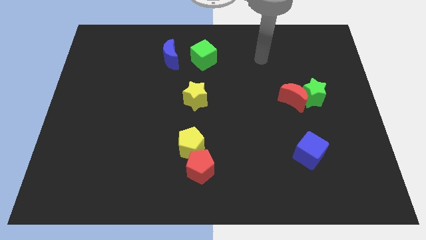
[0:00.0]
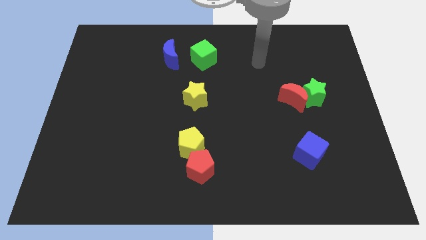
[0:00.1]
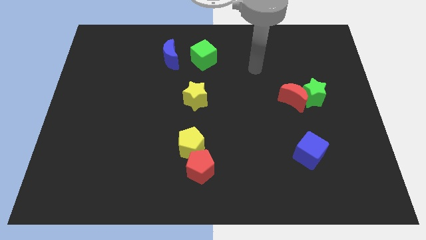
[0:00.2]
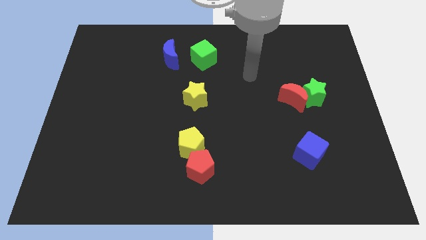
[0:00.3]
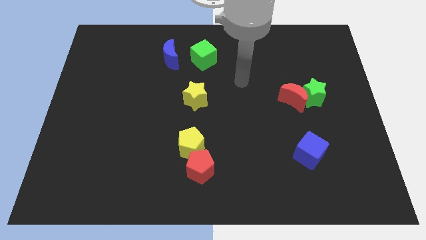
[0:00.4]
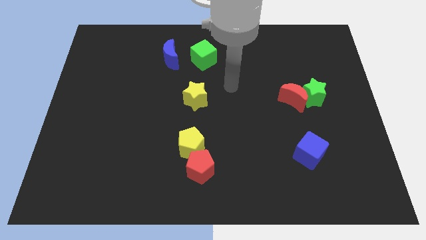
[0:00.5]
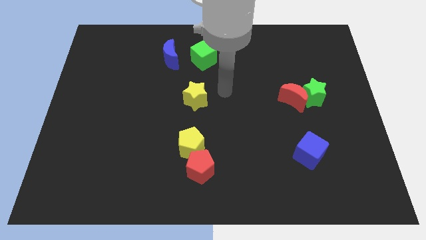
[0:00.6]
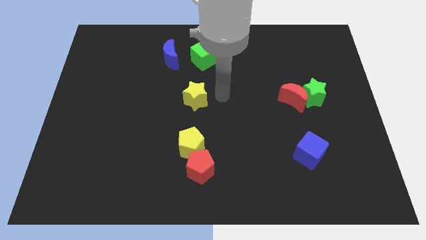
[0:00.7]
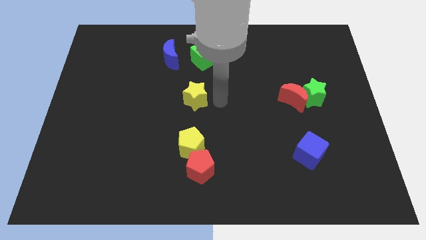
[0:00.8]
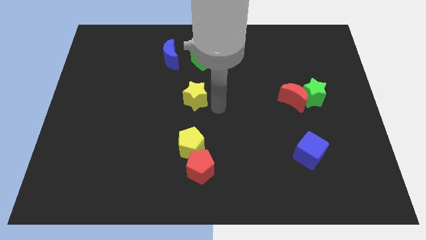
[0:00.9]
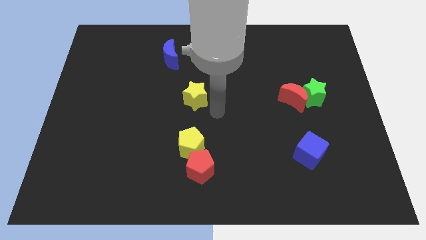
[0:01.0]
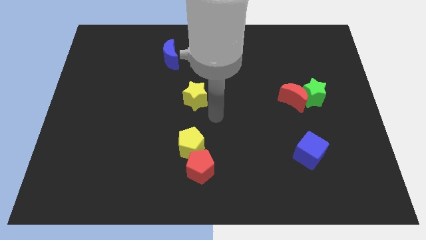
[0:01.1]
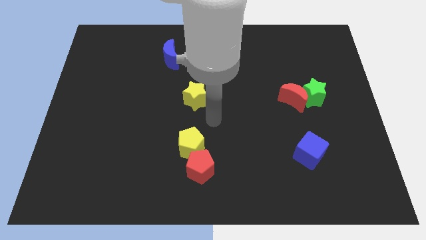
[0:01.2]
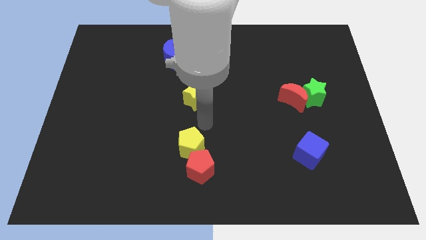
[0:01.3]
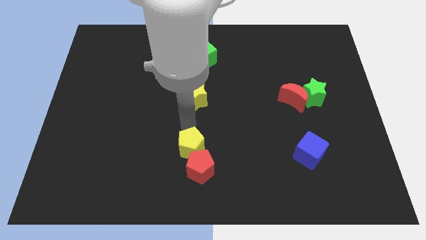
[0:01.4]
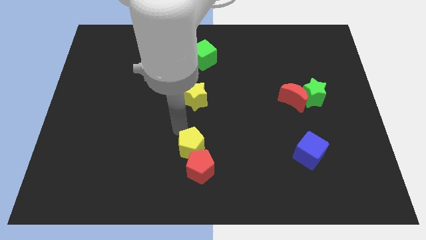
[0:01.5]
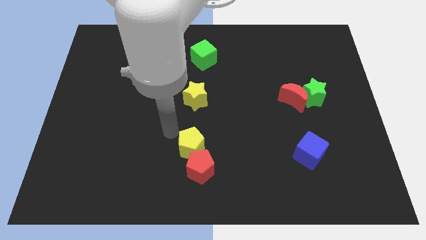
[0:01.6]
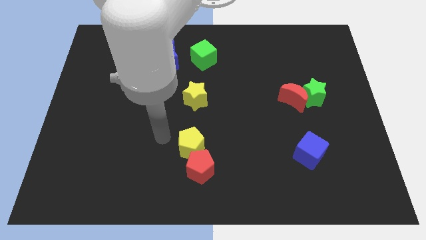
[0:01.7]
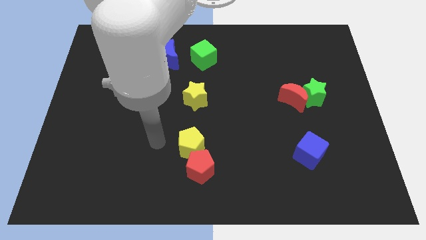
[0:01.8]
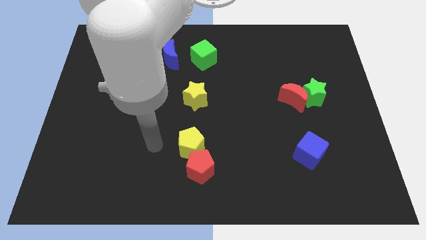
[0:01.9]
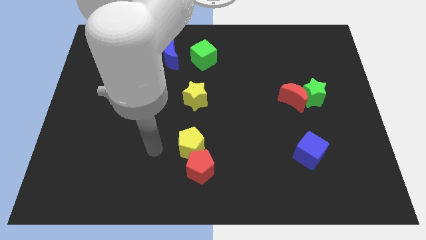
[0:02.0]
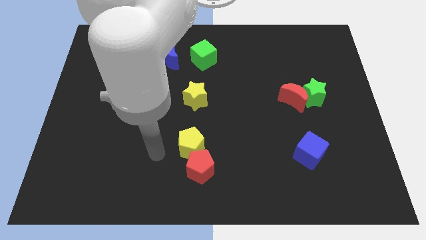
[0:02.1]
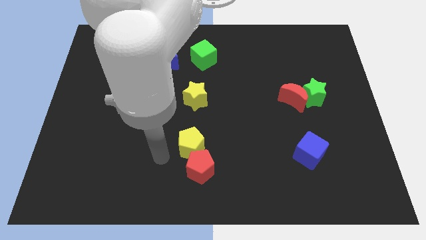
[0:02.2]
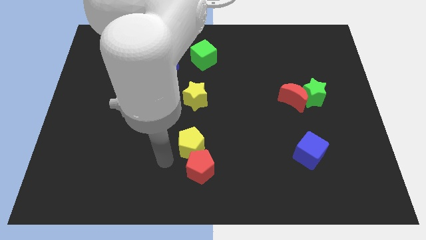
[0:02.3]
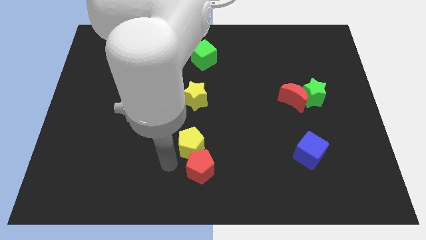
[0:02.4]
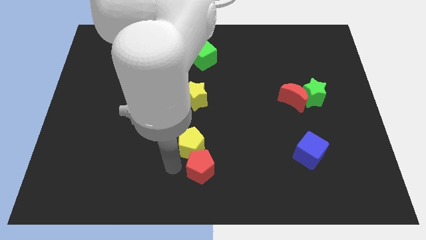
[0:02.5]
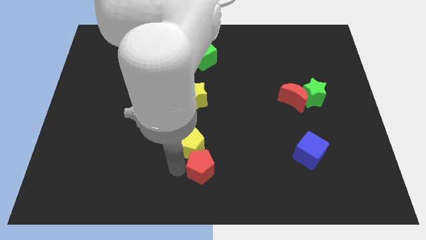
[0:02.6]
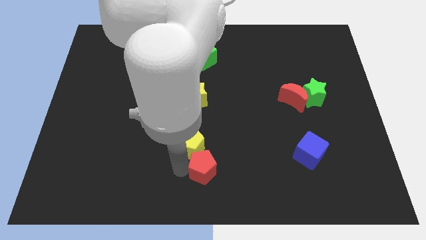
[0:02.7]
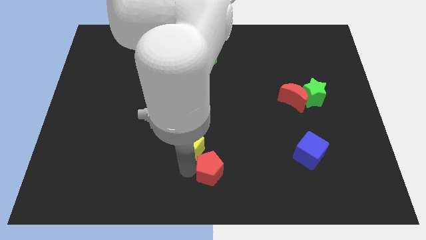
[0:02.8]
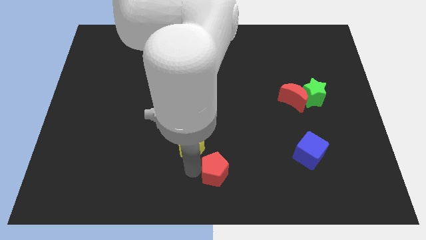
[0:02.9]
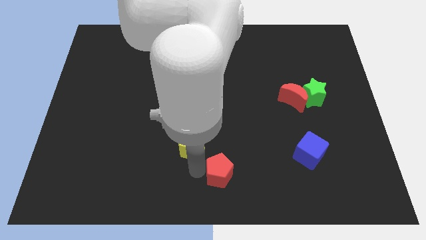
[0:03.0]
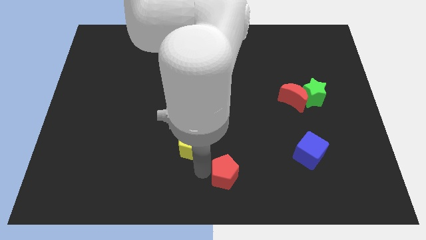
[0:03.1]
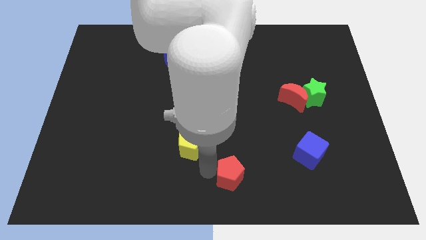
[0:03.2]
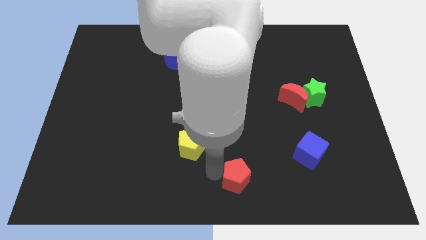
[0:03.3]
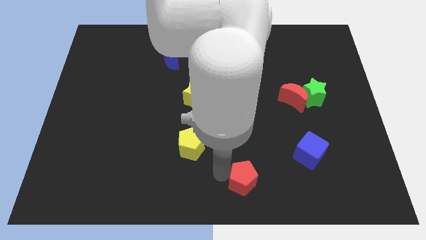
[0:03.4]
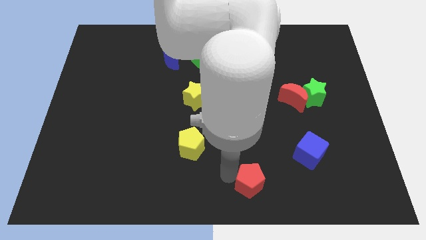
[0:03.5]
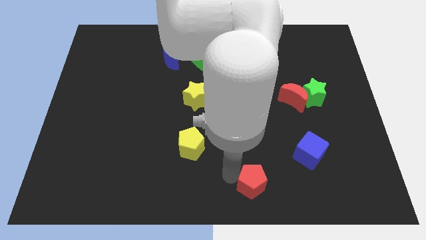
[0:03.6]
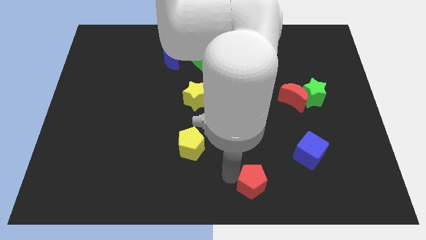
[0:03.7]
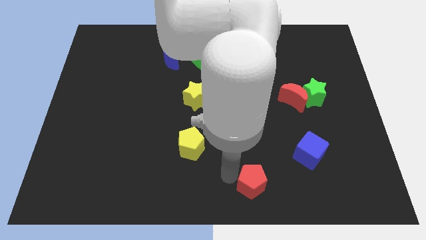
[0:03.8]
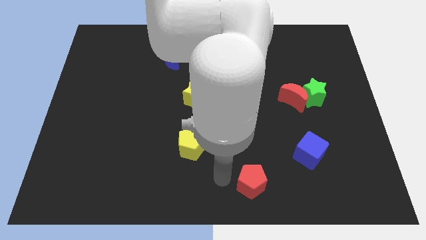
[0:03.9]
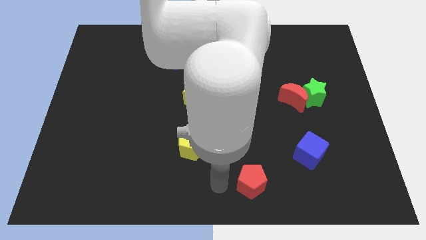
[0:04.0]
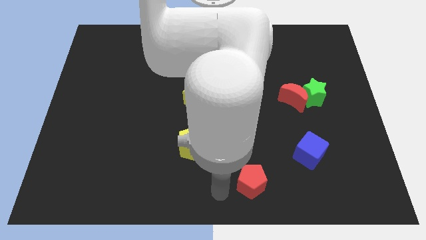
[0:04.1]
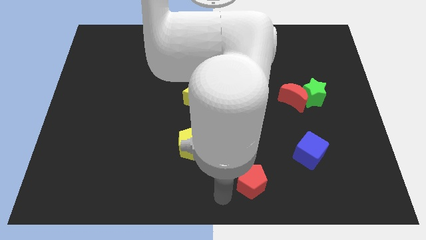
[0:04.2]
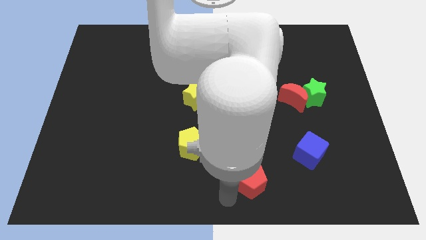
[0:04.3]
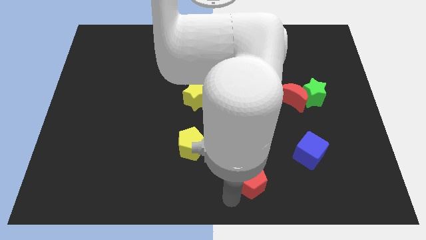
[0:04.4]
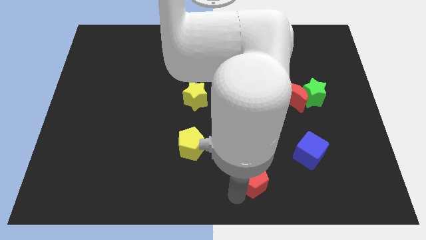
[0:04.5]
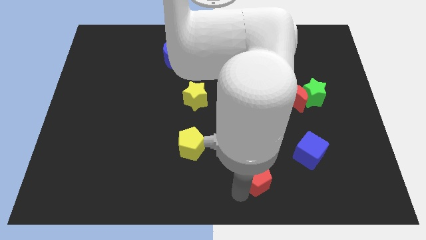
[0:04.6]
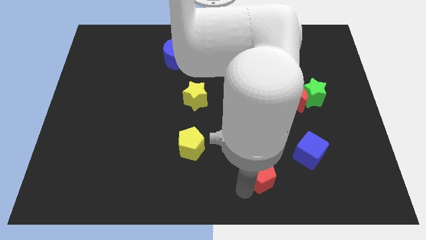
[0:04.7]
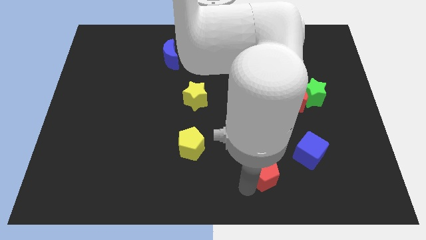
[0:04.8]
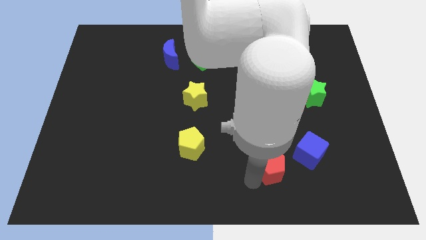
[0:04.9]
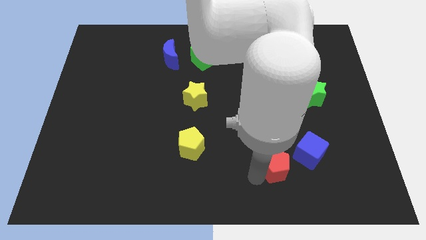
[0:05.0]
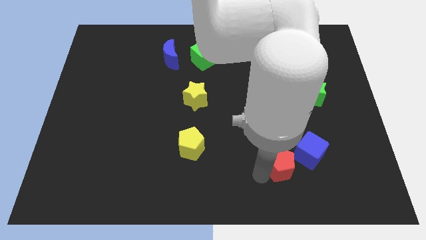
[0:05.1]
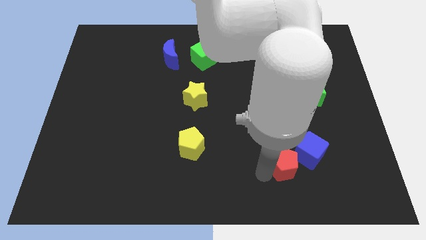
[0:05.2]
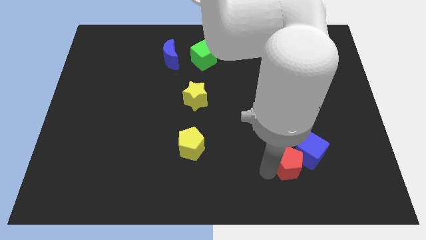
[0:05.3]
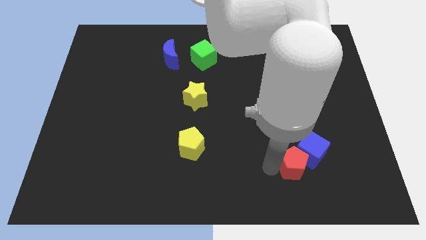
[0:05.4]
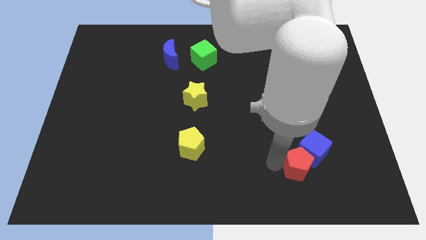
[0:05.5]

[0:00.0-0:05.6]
put the red pentagon next to the blue cube

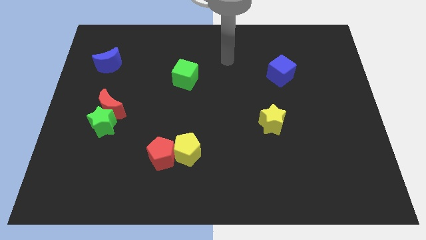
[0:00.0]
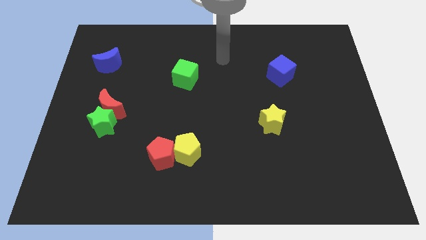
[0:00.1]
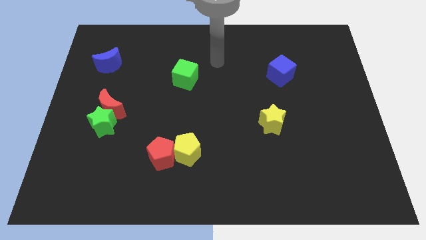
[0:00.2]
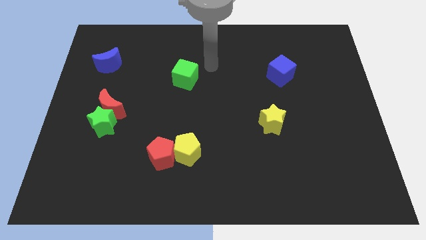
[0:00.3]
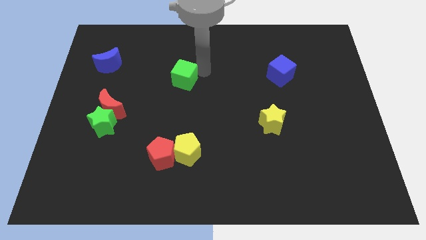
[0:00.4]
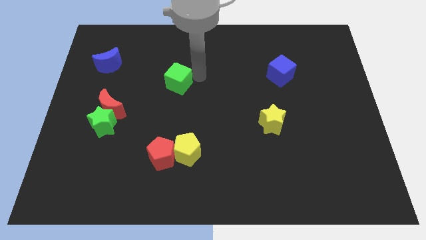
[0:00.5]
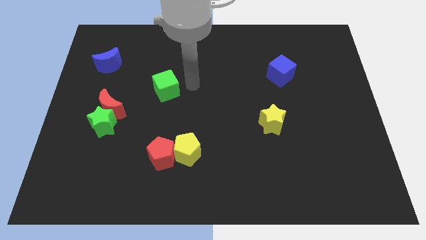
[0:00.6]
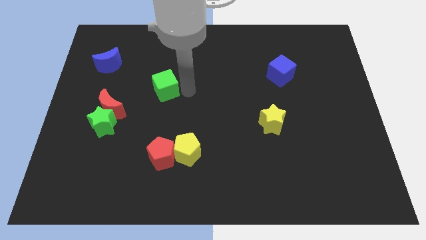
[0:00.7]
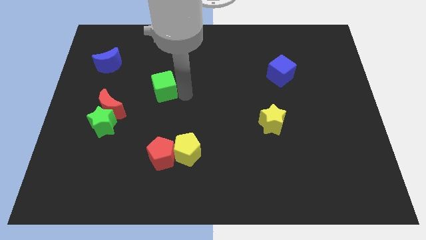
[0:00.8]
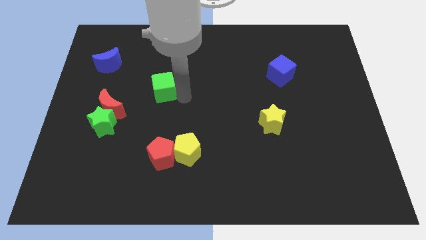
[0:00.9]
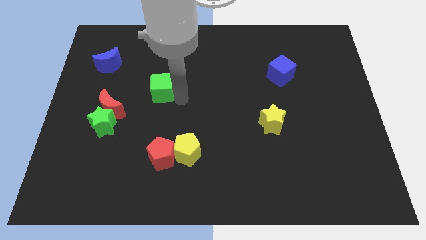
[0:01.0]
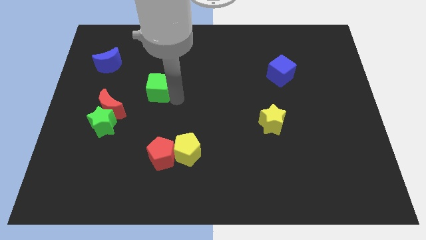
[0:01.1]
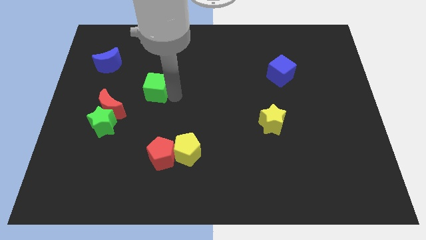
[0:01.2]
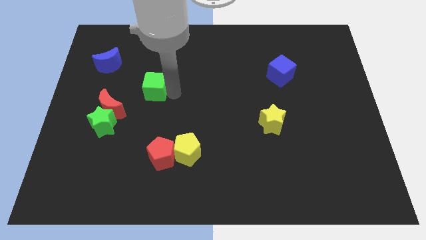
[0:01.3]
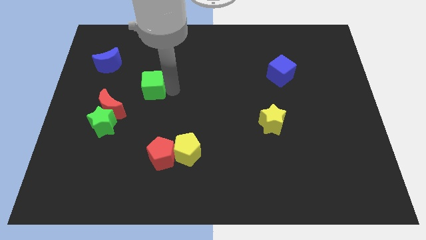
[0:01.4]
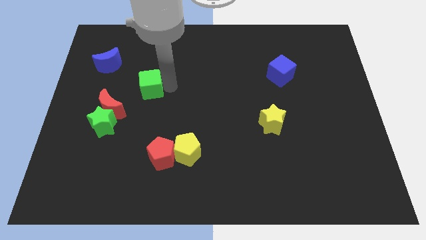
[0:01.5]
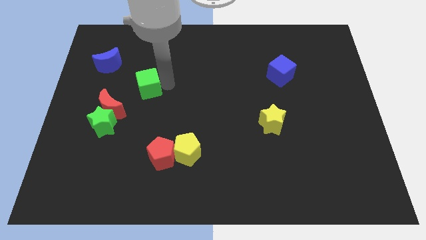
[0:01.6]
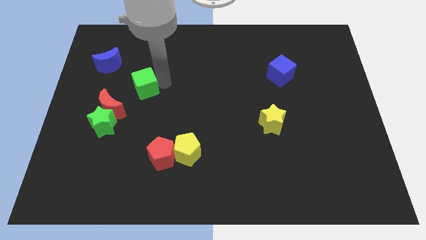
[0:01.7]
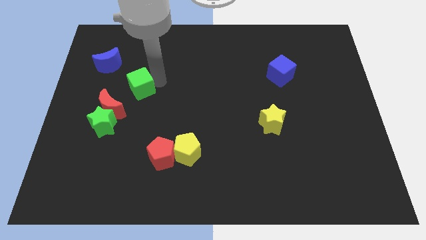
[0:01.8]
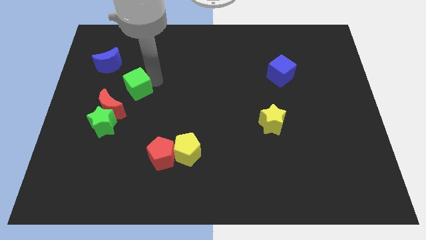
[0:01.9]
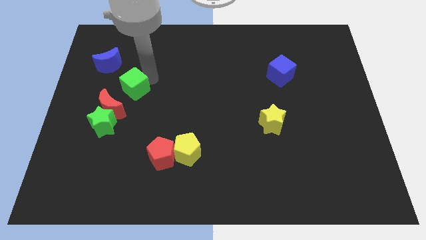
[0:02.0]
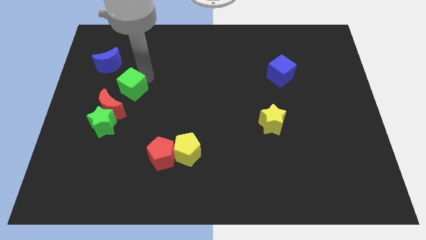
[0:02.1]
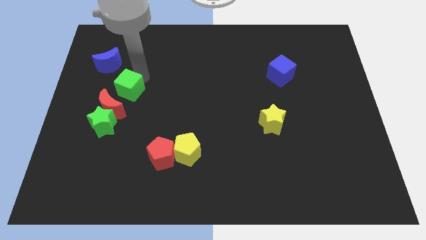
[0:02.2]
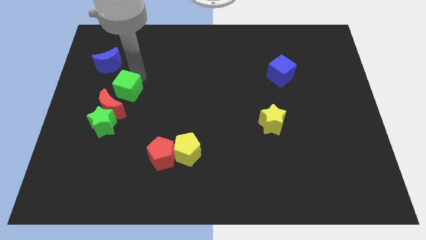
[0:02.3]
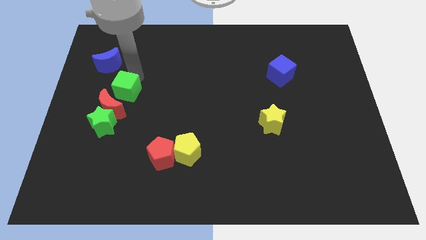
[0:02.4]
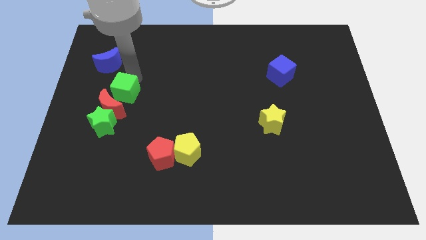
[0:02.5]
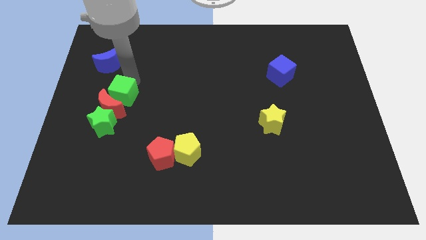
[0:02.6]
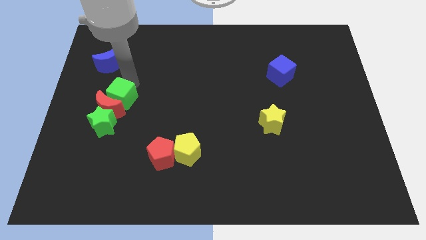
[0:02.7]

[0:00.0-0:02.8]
slide the green cube close to the red moon

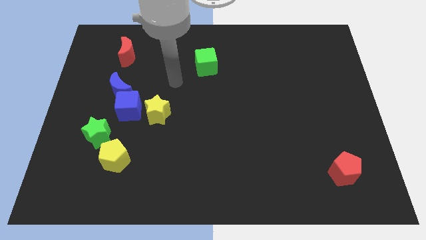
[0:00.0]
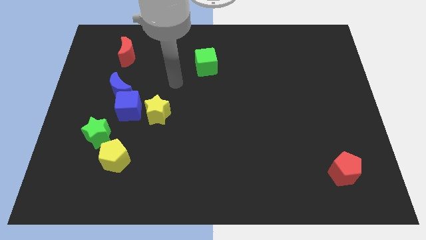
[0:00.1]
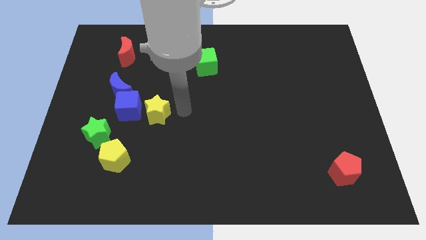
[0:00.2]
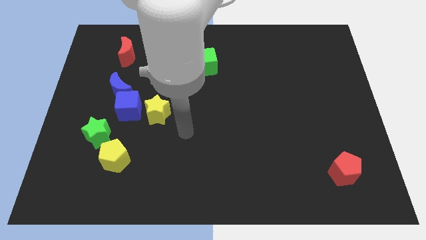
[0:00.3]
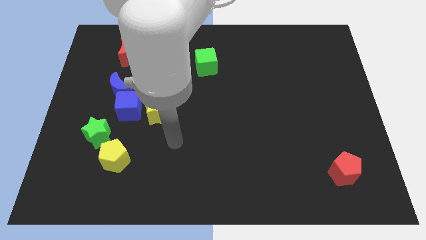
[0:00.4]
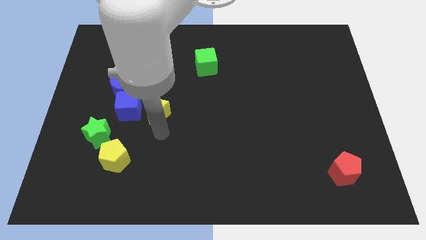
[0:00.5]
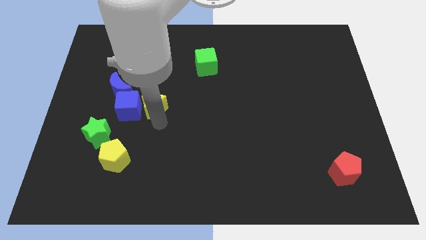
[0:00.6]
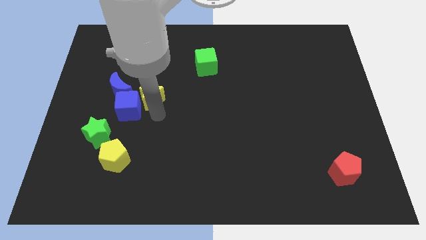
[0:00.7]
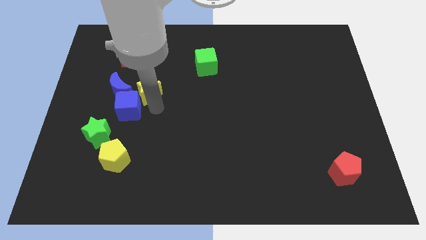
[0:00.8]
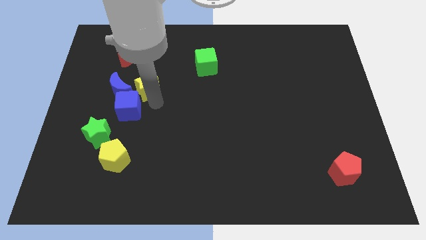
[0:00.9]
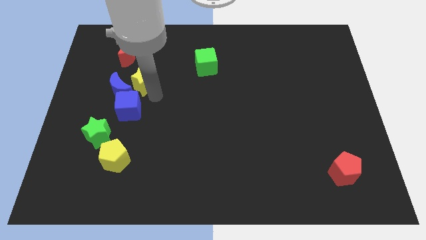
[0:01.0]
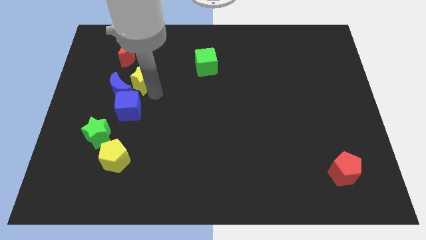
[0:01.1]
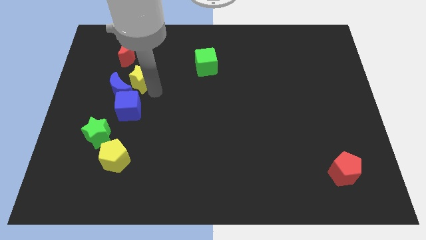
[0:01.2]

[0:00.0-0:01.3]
put the yellow star towards the blue moon
